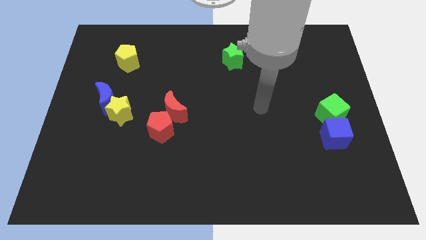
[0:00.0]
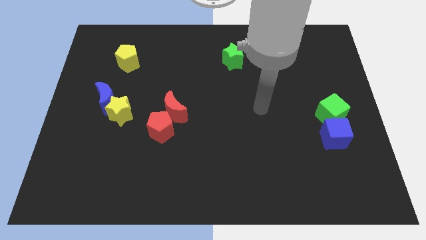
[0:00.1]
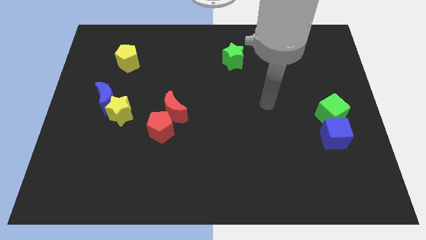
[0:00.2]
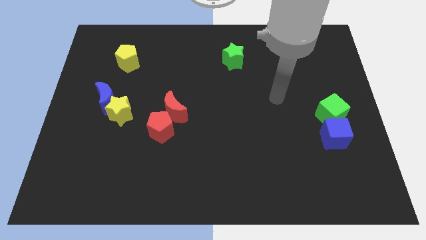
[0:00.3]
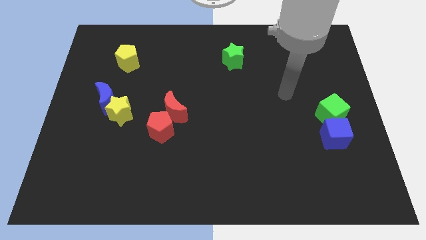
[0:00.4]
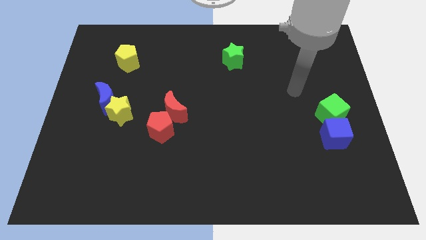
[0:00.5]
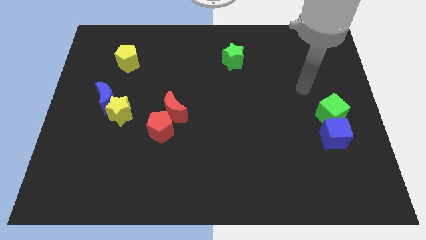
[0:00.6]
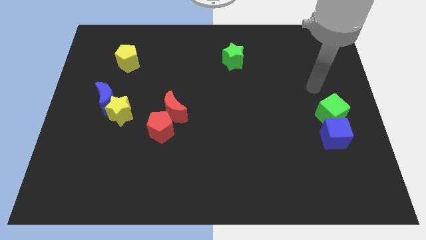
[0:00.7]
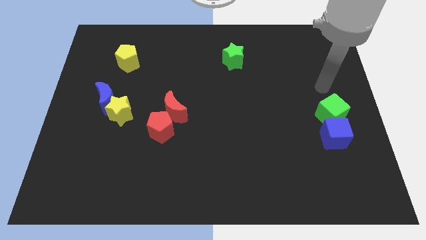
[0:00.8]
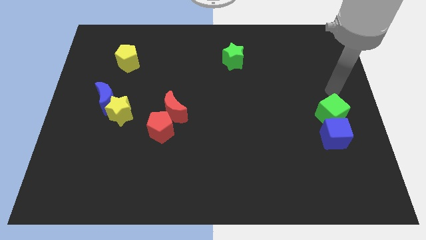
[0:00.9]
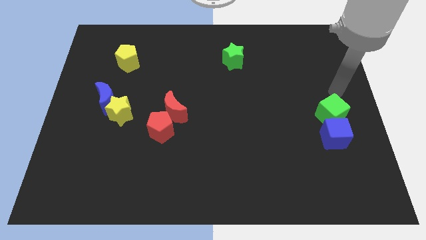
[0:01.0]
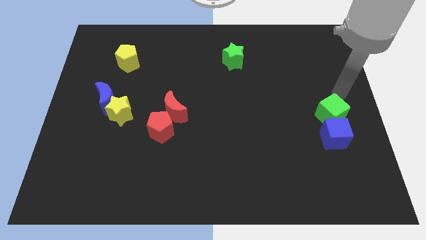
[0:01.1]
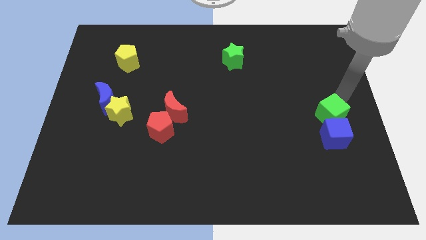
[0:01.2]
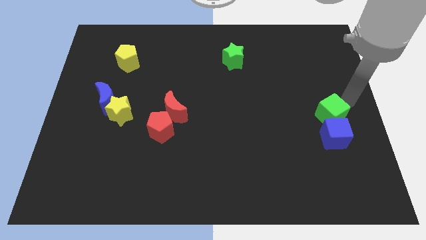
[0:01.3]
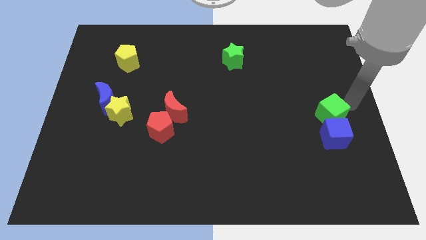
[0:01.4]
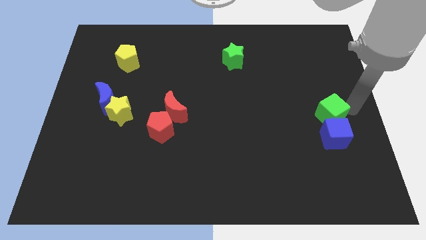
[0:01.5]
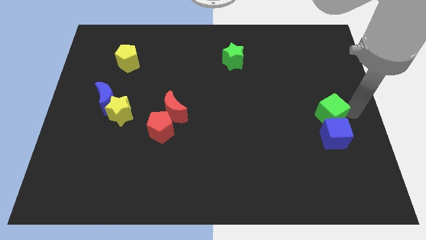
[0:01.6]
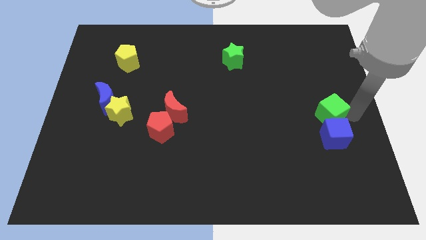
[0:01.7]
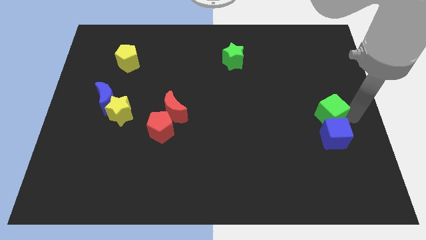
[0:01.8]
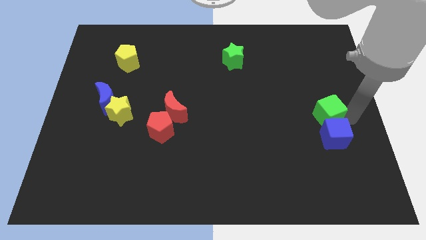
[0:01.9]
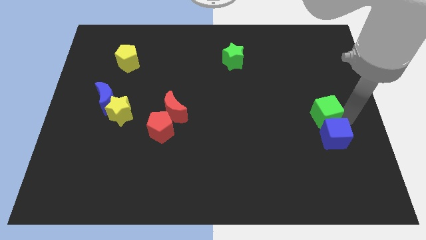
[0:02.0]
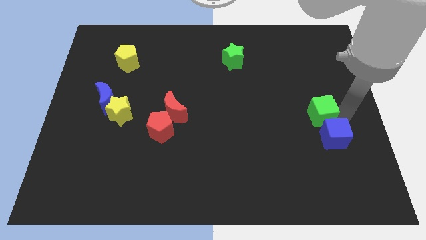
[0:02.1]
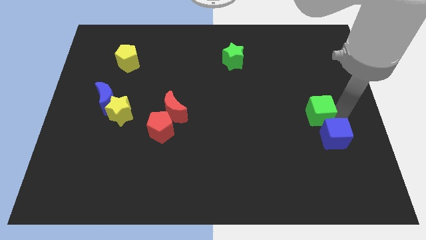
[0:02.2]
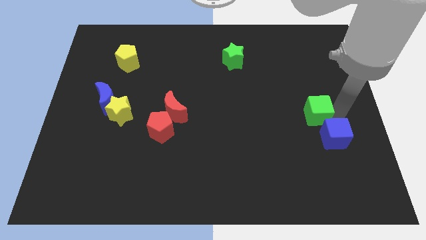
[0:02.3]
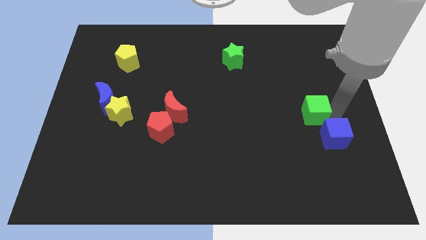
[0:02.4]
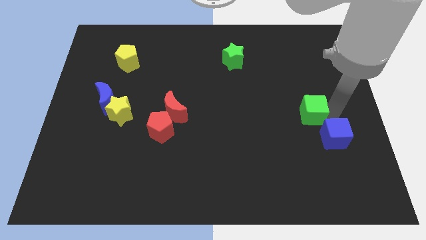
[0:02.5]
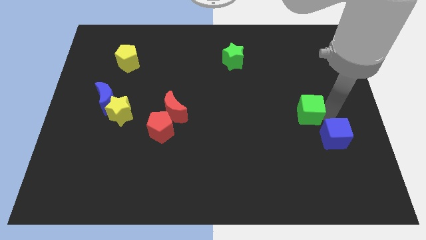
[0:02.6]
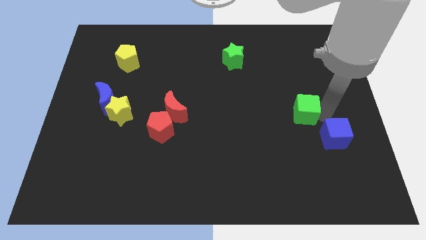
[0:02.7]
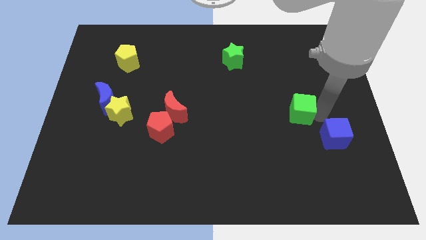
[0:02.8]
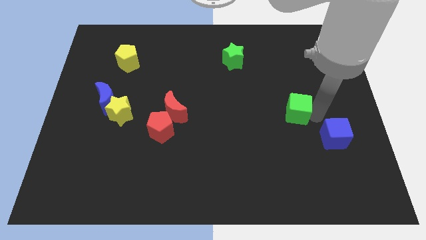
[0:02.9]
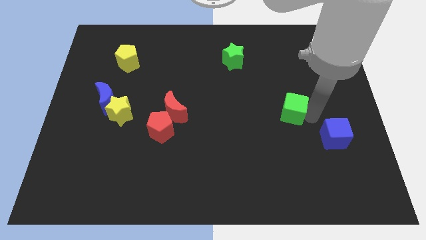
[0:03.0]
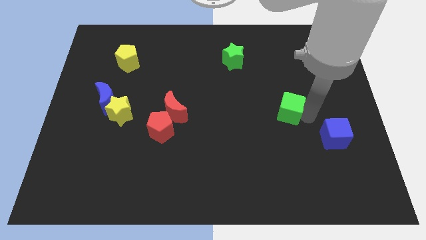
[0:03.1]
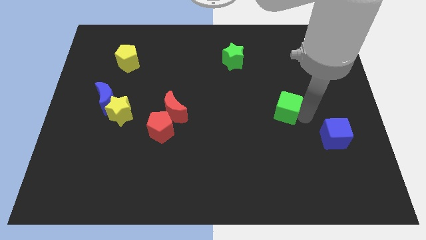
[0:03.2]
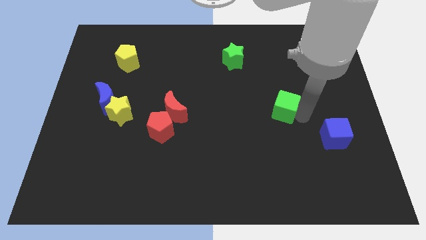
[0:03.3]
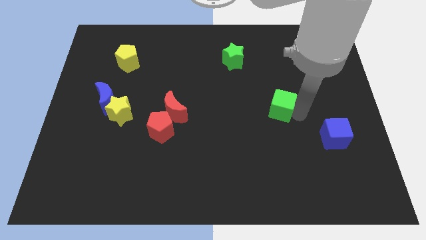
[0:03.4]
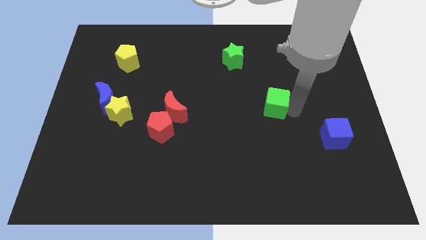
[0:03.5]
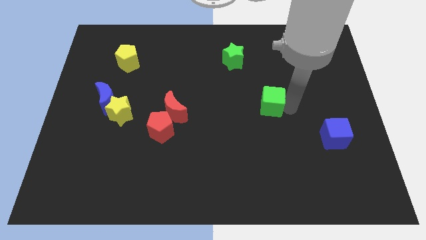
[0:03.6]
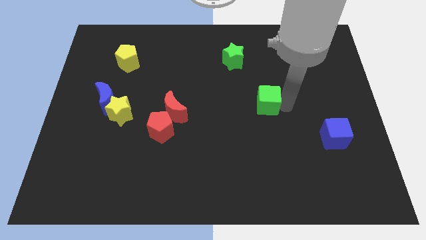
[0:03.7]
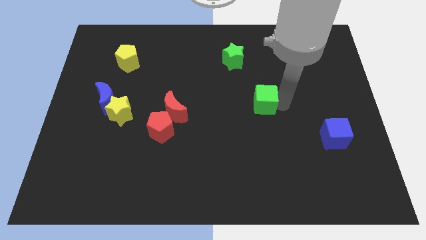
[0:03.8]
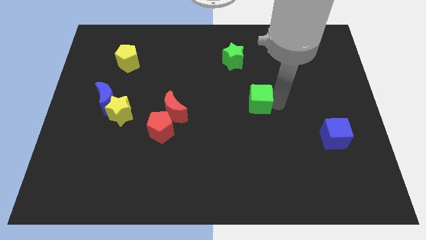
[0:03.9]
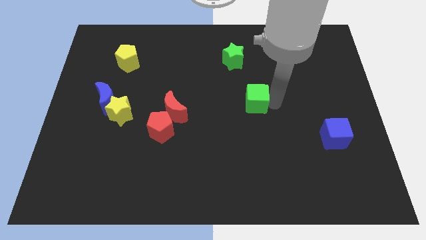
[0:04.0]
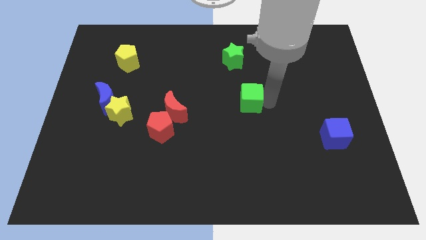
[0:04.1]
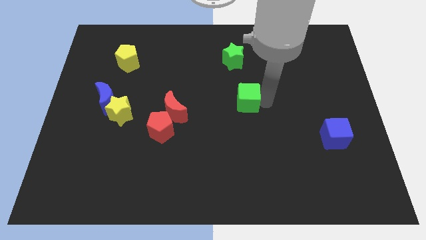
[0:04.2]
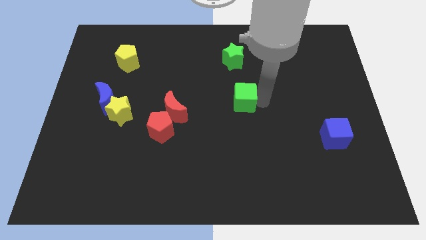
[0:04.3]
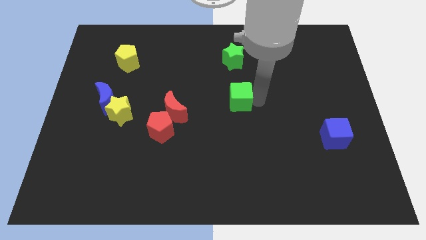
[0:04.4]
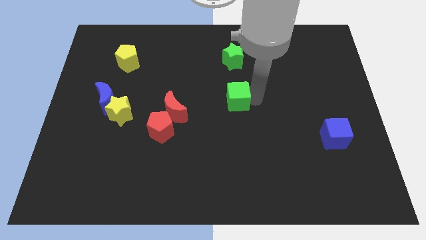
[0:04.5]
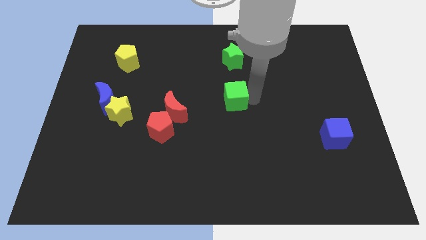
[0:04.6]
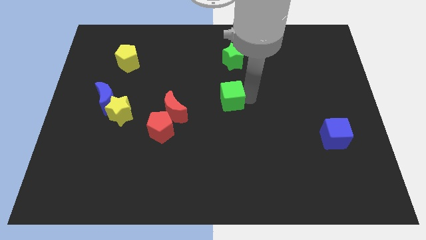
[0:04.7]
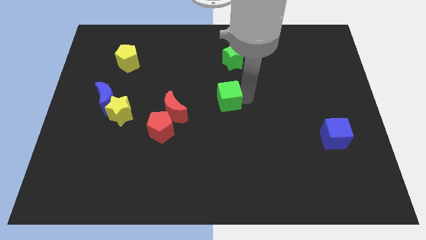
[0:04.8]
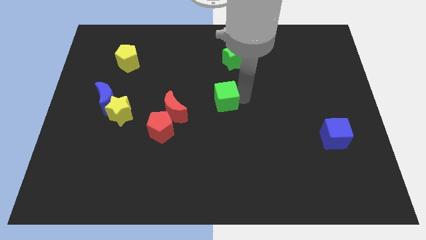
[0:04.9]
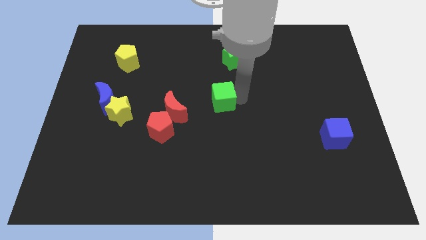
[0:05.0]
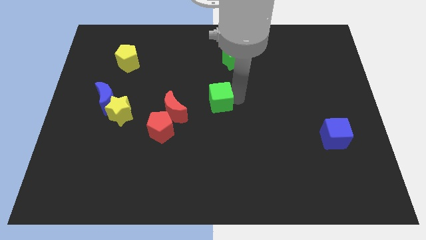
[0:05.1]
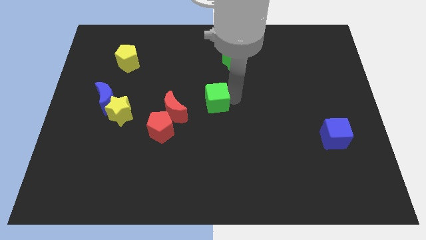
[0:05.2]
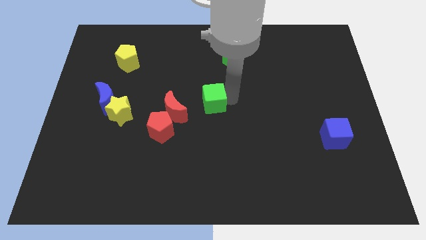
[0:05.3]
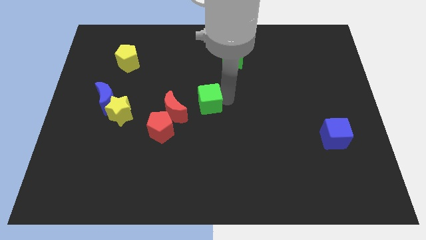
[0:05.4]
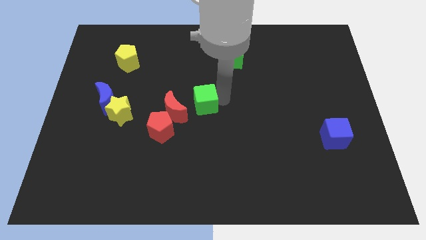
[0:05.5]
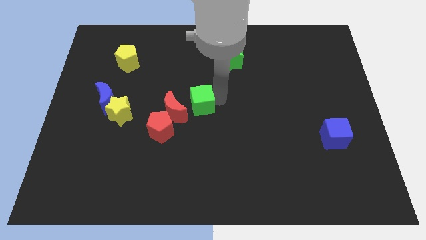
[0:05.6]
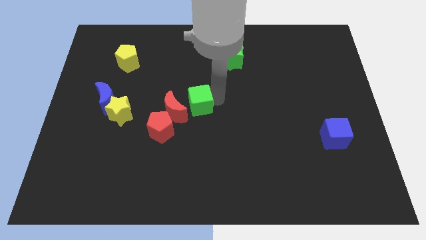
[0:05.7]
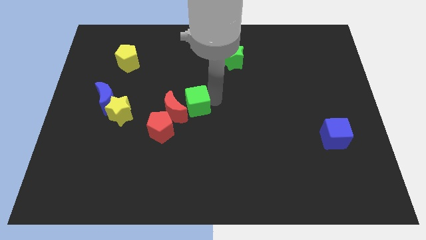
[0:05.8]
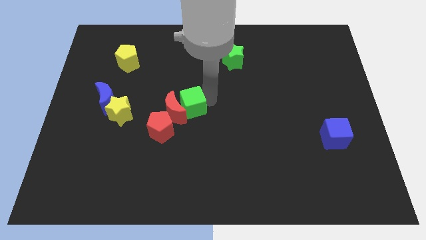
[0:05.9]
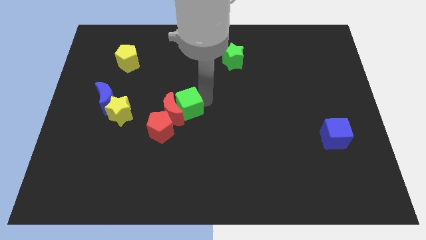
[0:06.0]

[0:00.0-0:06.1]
push the green cube close to the red moon

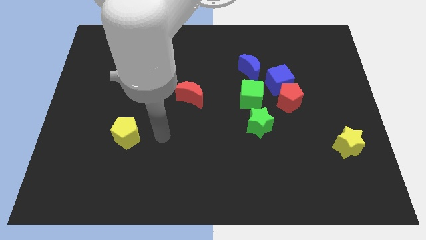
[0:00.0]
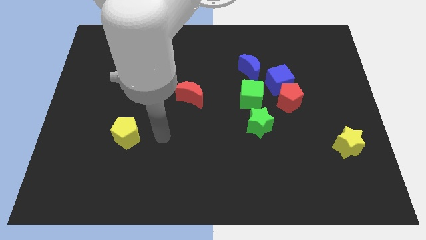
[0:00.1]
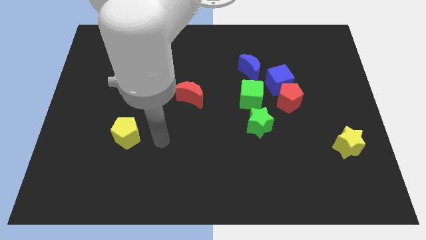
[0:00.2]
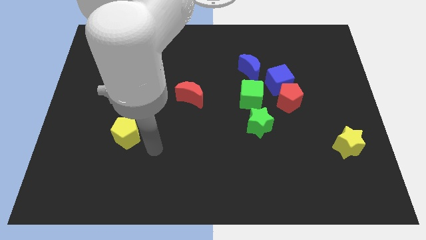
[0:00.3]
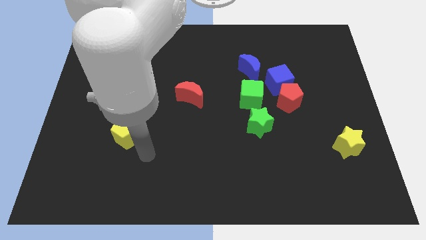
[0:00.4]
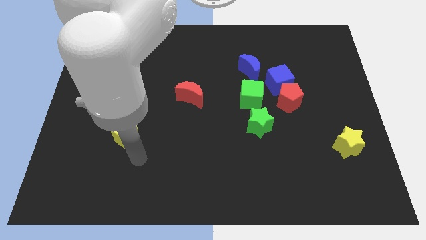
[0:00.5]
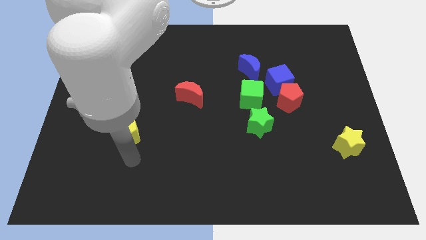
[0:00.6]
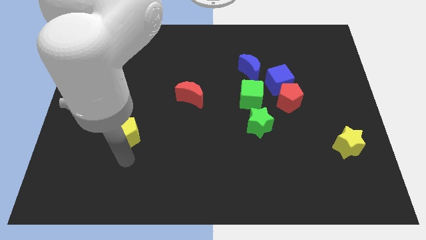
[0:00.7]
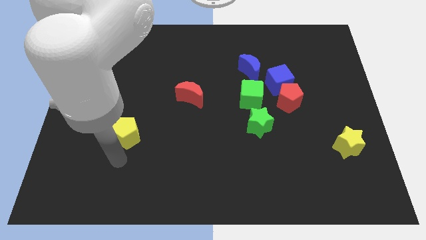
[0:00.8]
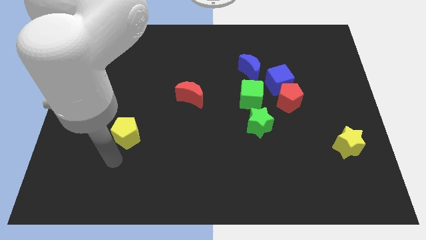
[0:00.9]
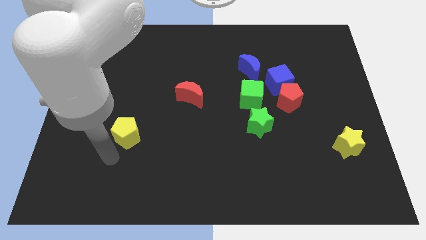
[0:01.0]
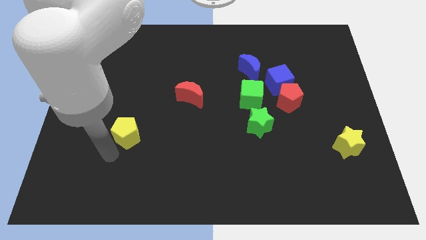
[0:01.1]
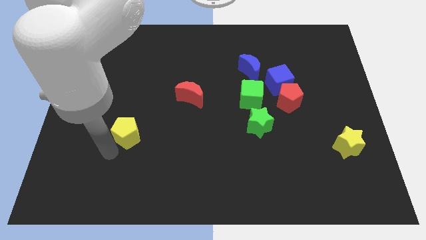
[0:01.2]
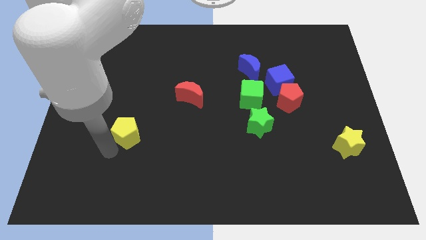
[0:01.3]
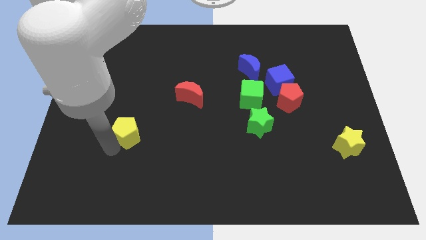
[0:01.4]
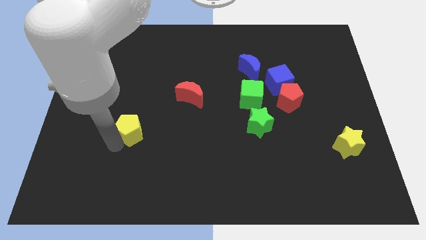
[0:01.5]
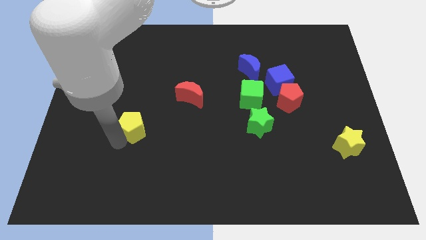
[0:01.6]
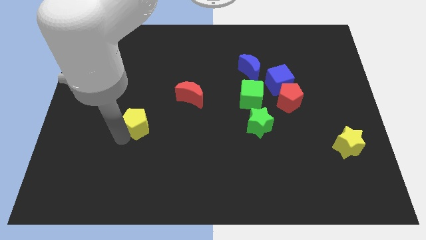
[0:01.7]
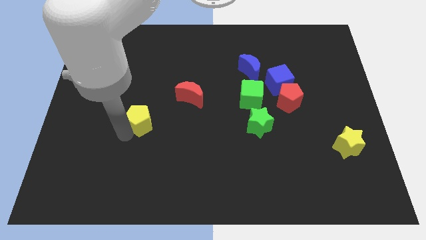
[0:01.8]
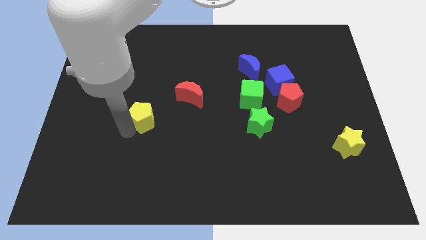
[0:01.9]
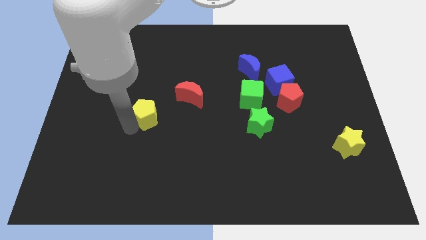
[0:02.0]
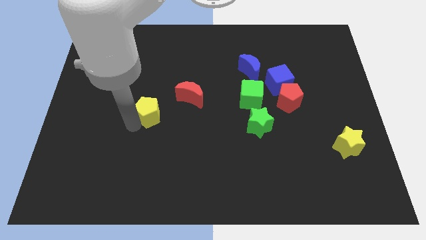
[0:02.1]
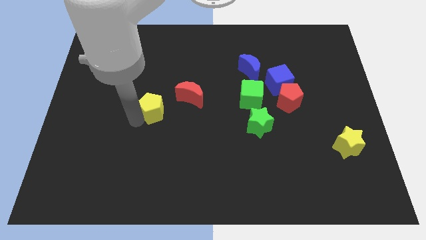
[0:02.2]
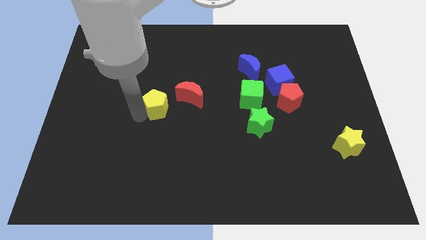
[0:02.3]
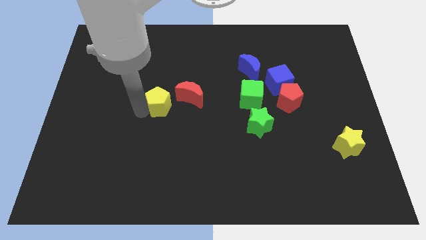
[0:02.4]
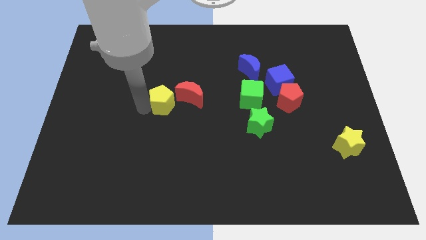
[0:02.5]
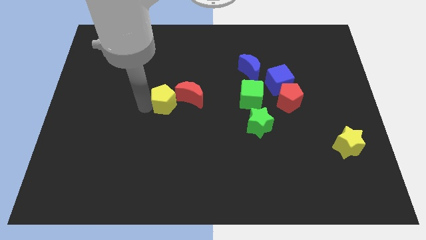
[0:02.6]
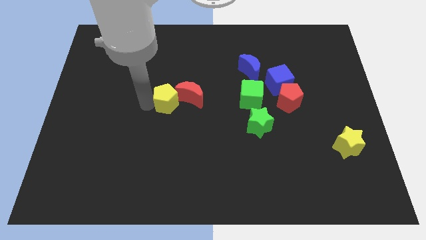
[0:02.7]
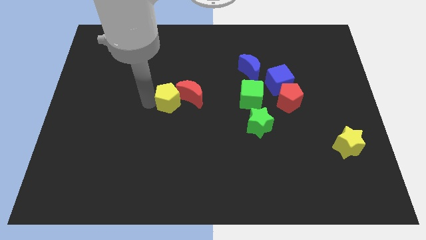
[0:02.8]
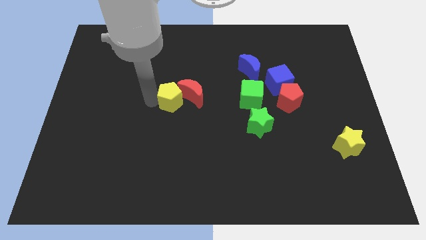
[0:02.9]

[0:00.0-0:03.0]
put the yellow pentagon towards the red moon
